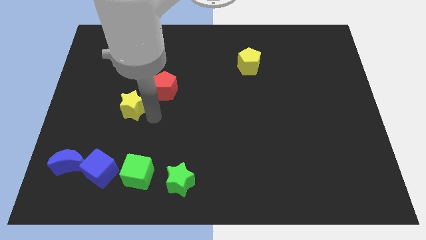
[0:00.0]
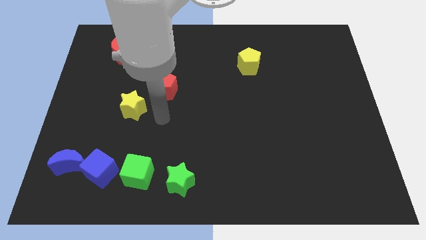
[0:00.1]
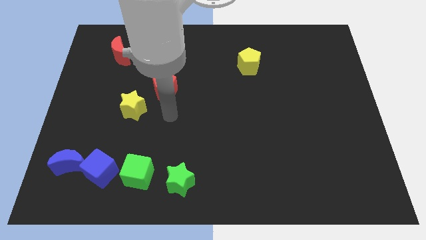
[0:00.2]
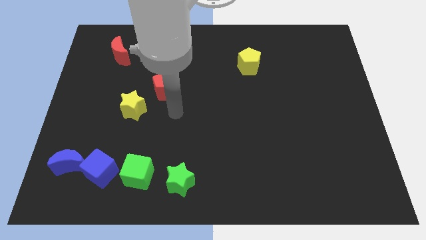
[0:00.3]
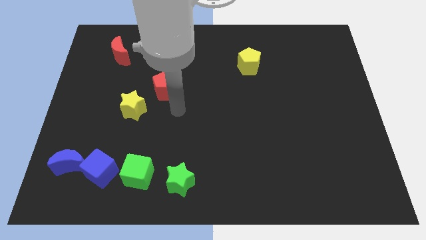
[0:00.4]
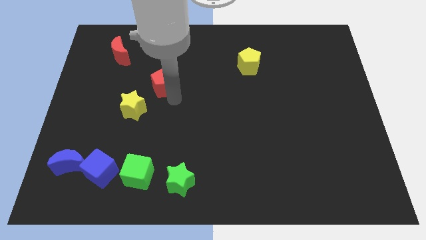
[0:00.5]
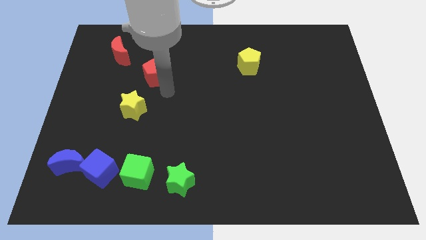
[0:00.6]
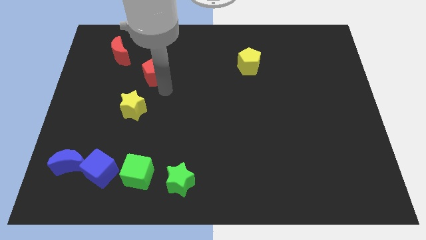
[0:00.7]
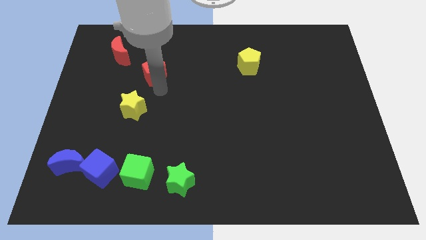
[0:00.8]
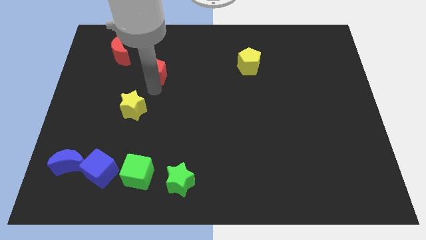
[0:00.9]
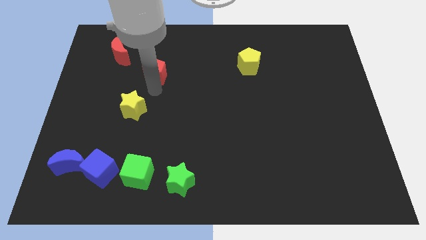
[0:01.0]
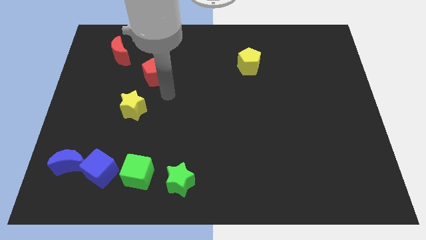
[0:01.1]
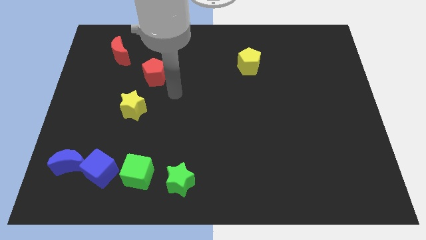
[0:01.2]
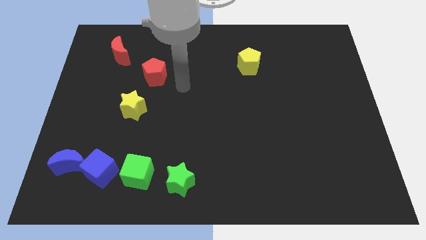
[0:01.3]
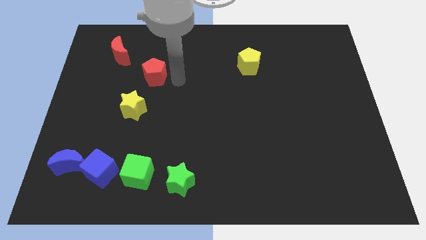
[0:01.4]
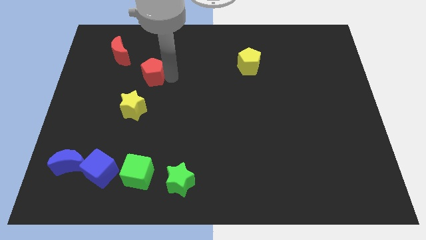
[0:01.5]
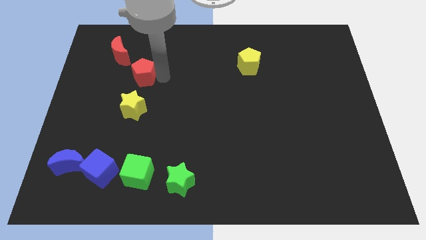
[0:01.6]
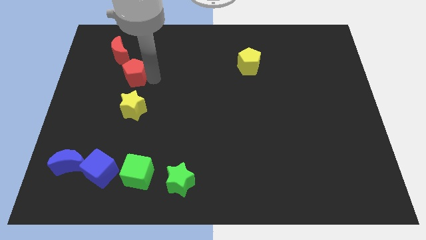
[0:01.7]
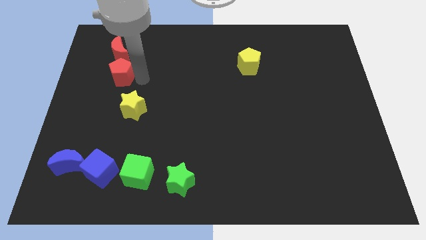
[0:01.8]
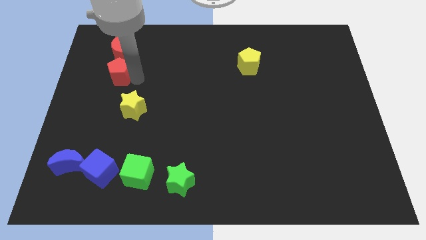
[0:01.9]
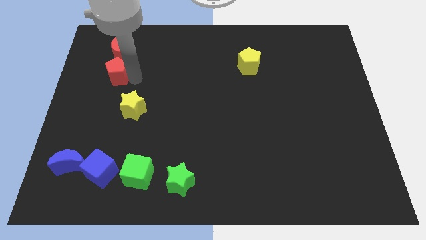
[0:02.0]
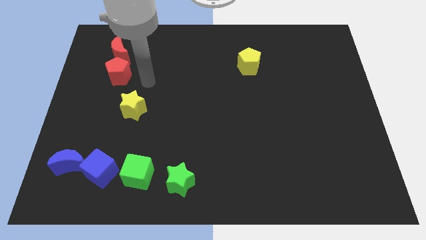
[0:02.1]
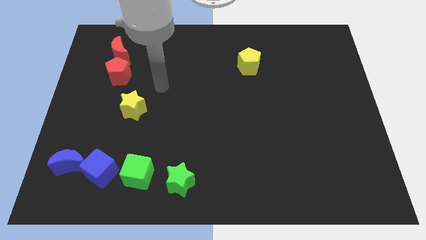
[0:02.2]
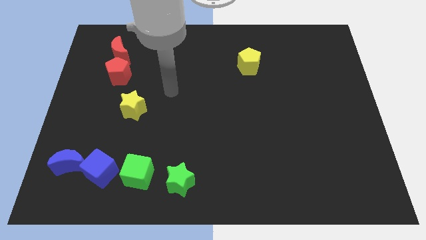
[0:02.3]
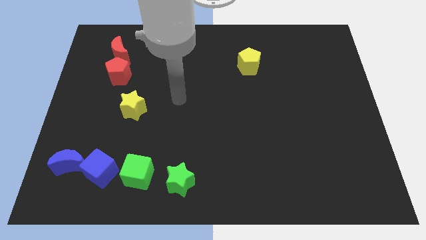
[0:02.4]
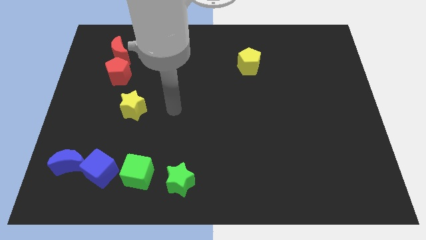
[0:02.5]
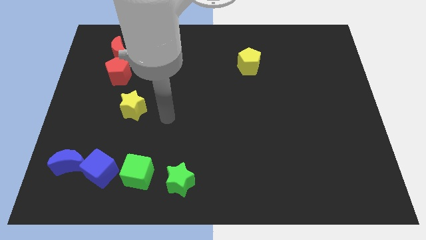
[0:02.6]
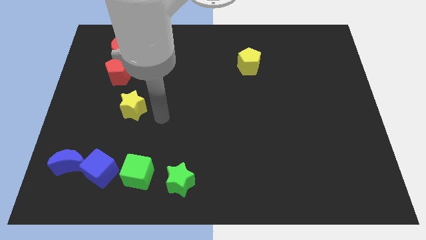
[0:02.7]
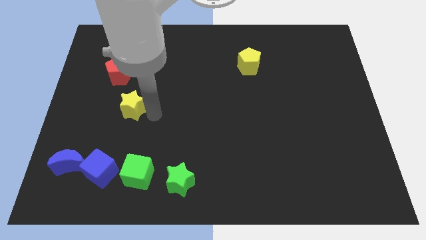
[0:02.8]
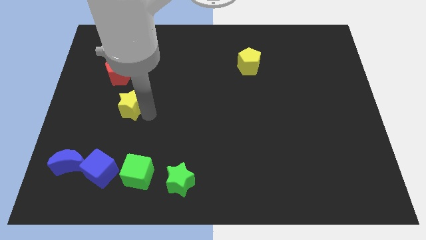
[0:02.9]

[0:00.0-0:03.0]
move the red pentagon at the bottom of the red crescent and go away

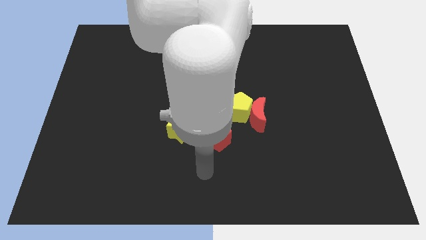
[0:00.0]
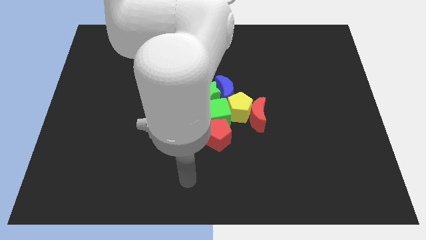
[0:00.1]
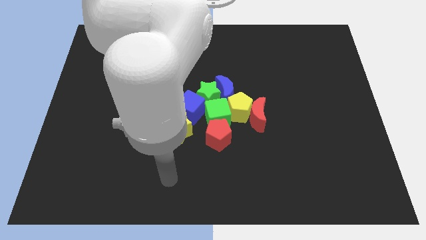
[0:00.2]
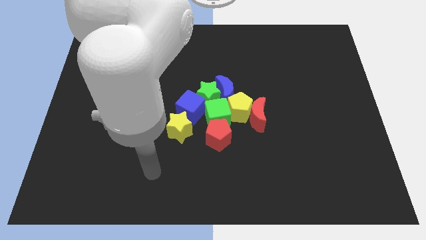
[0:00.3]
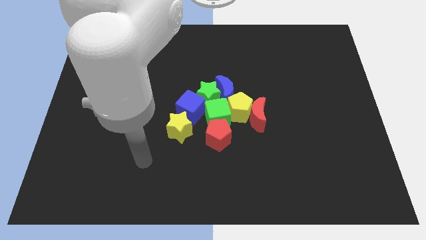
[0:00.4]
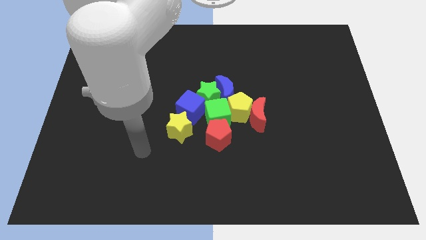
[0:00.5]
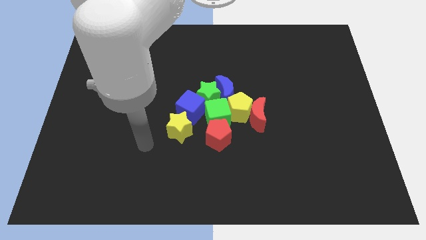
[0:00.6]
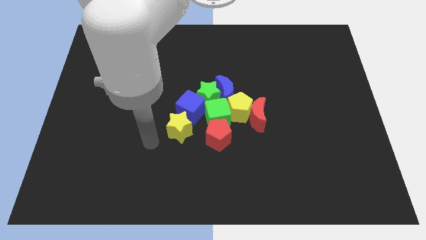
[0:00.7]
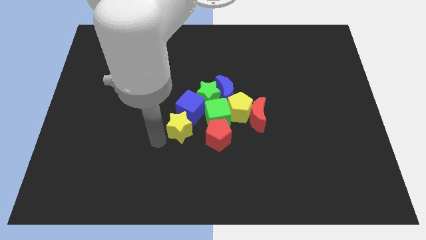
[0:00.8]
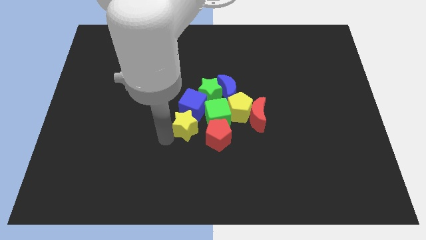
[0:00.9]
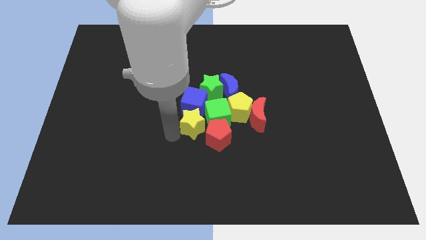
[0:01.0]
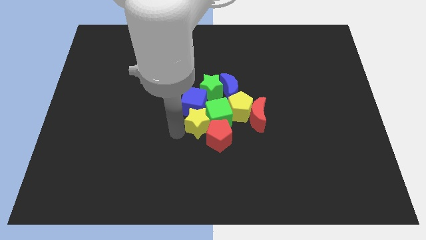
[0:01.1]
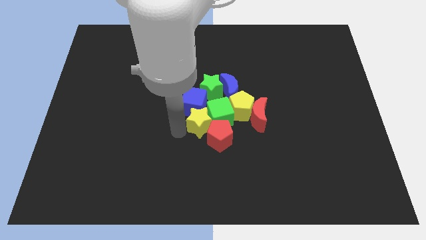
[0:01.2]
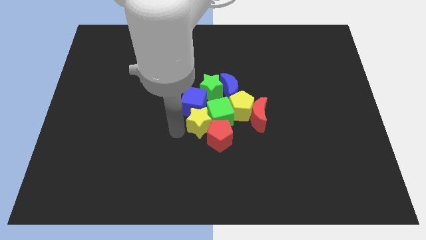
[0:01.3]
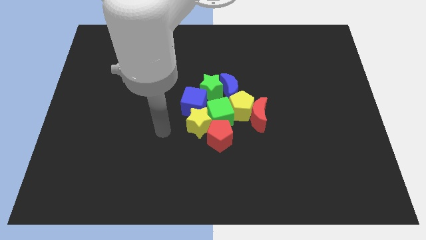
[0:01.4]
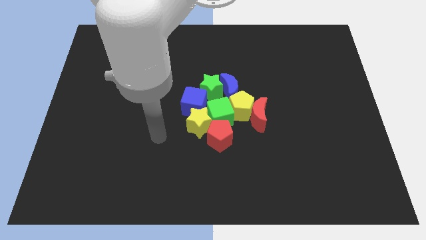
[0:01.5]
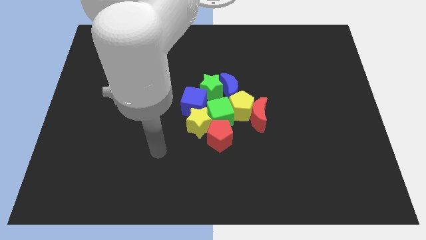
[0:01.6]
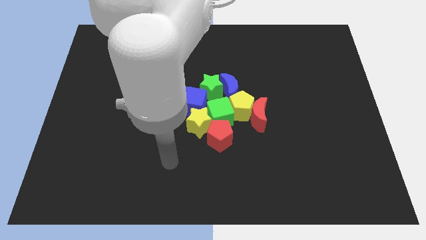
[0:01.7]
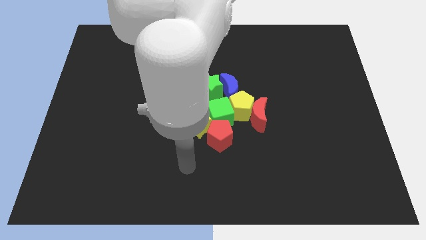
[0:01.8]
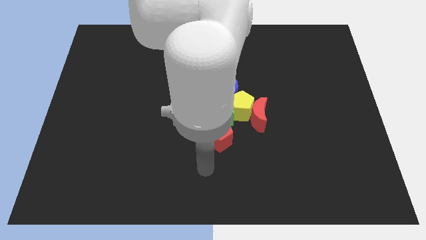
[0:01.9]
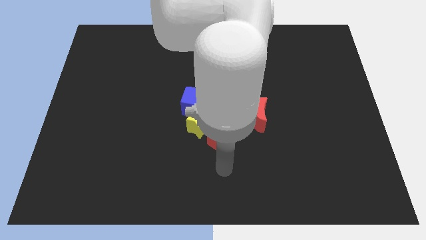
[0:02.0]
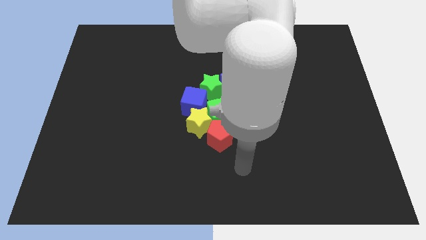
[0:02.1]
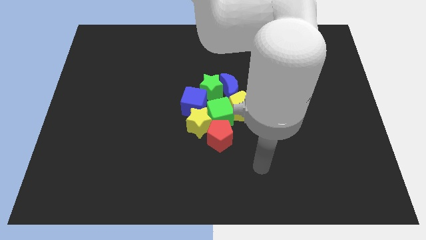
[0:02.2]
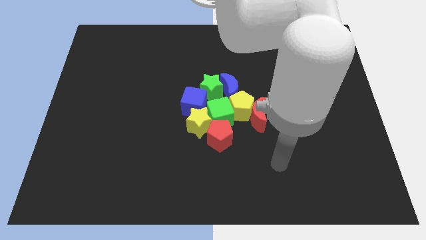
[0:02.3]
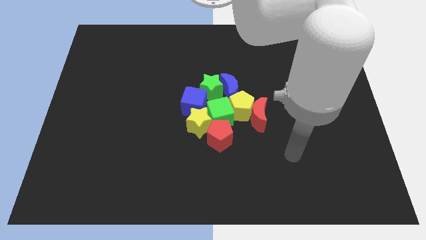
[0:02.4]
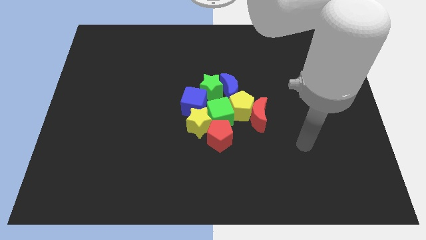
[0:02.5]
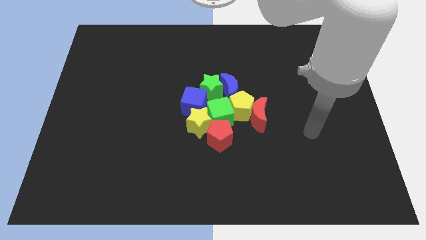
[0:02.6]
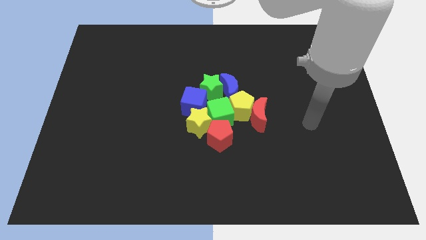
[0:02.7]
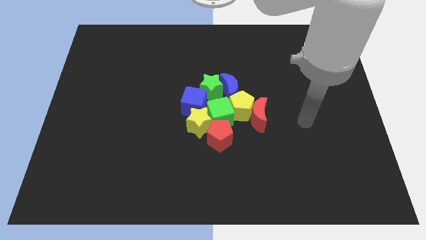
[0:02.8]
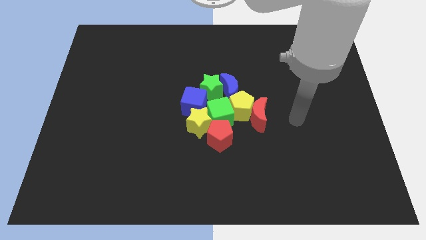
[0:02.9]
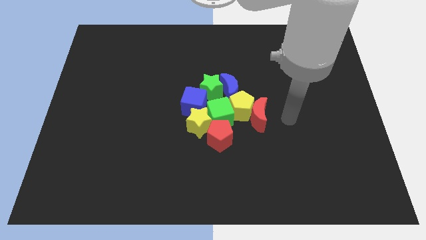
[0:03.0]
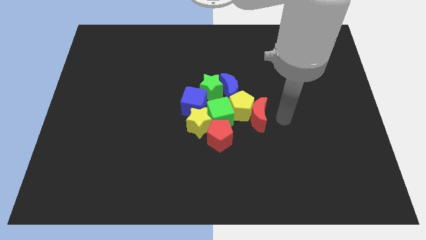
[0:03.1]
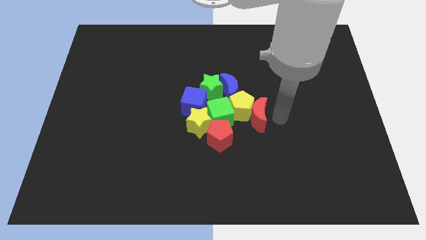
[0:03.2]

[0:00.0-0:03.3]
push the yellow star towards the group of blocks

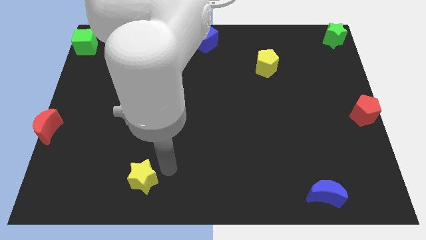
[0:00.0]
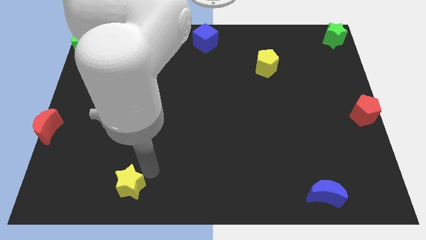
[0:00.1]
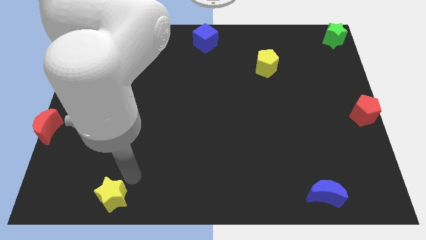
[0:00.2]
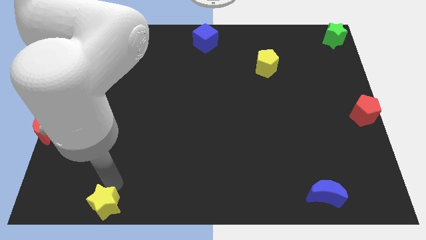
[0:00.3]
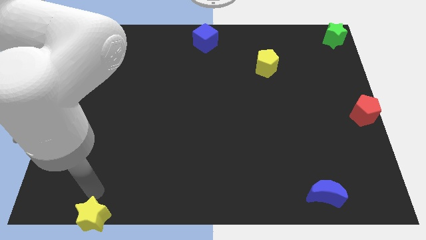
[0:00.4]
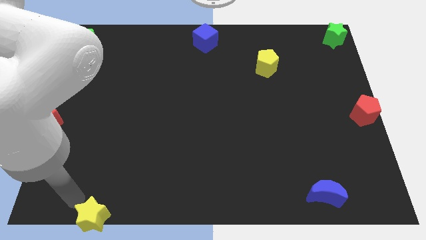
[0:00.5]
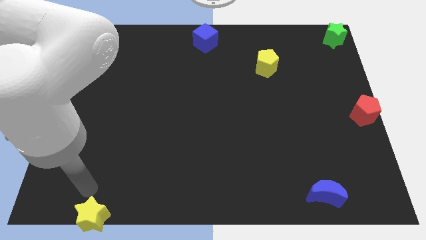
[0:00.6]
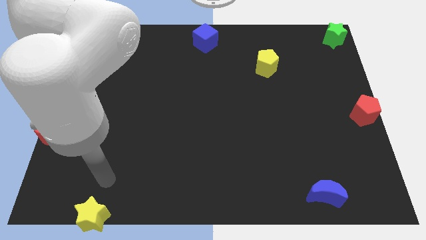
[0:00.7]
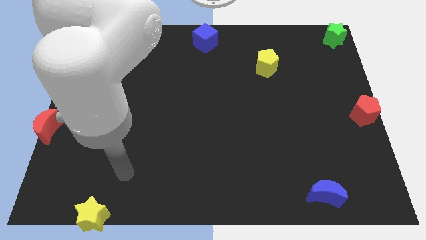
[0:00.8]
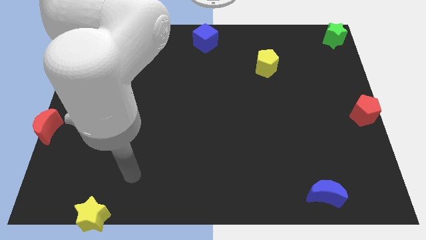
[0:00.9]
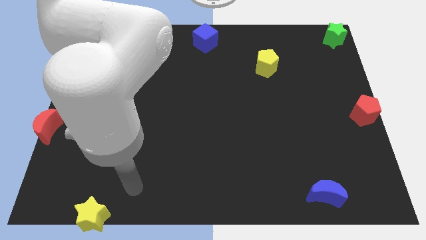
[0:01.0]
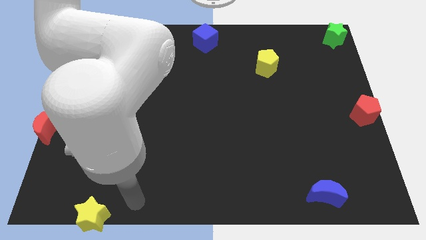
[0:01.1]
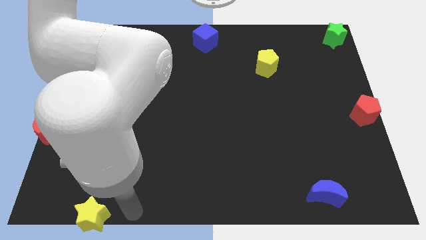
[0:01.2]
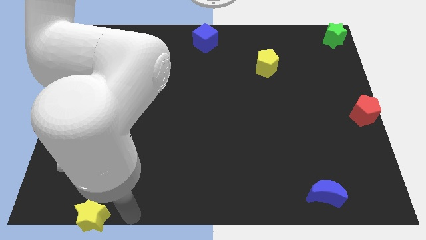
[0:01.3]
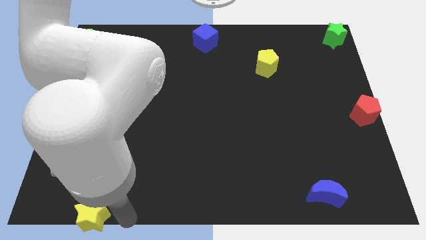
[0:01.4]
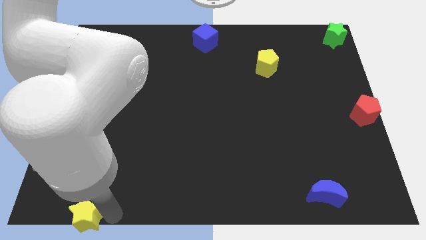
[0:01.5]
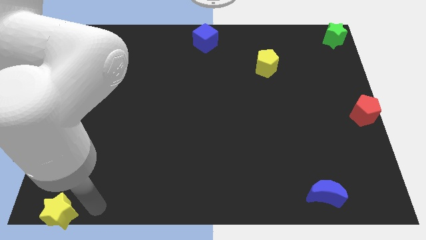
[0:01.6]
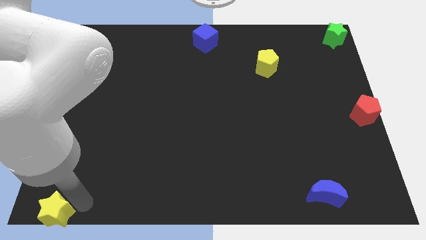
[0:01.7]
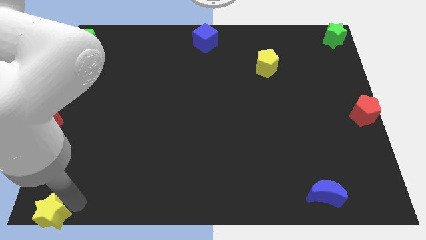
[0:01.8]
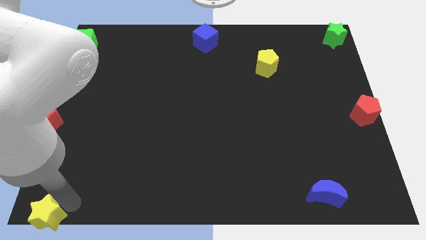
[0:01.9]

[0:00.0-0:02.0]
move yellow star to the bottom left of the board

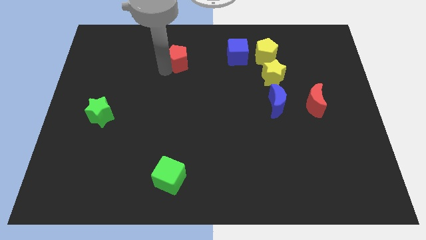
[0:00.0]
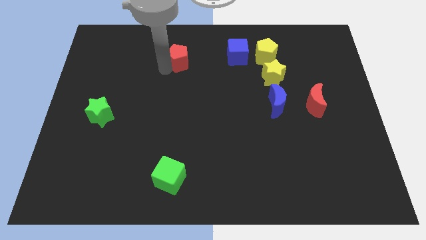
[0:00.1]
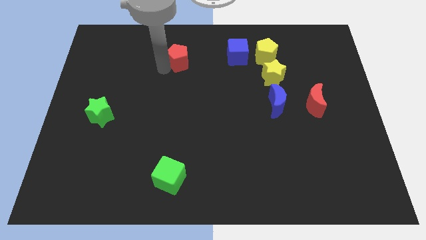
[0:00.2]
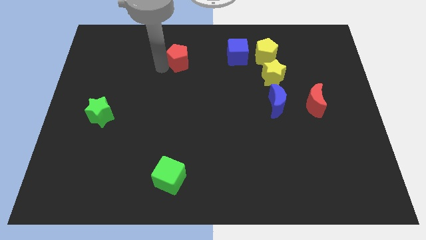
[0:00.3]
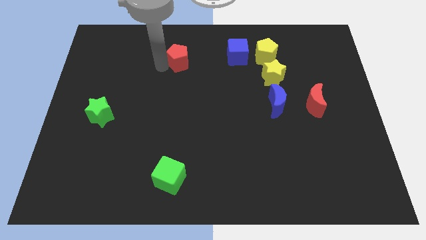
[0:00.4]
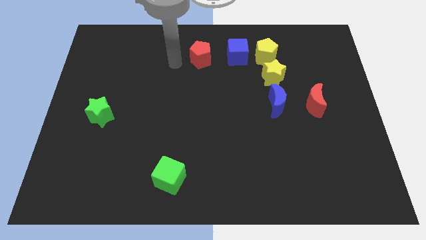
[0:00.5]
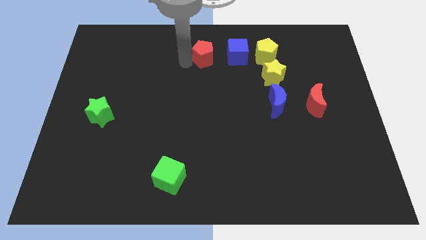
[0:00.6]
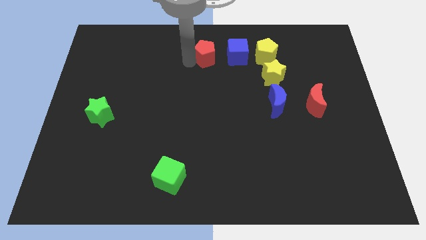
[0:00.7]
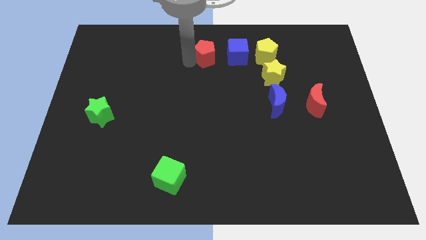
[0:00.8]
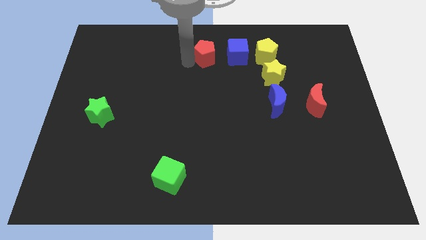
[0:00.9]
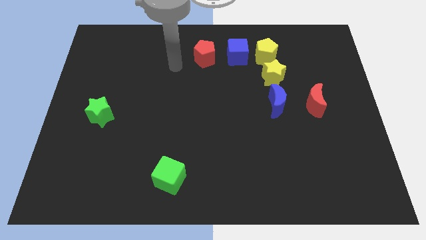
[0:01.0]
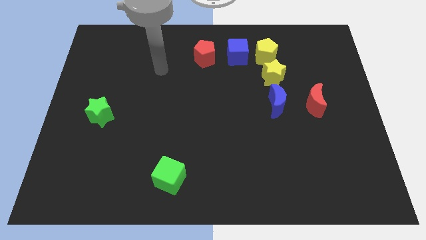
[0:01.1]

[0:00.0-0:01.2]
push the red pentagon parallel to the left of the blue cube
